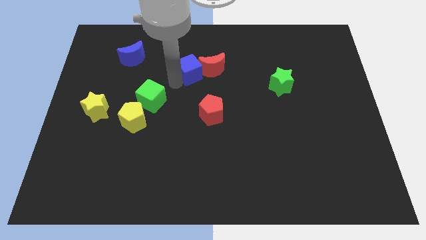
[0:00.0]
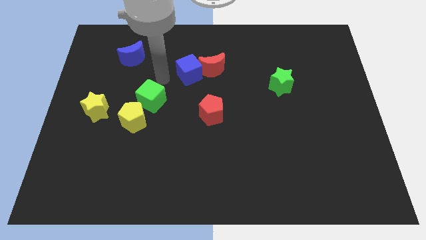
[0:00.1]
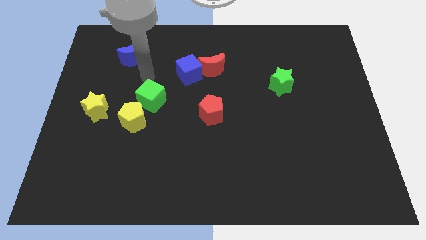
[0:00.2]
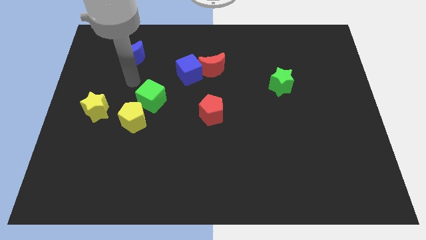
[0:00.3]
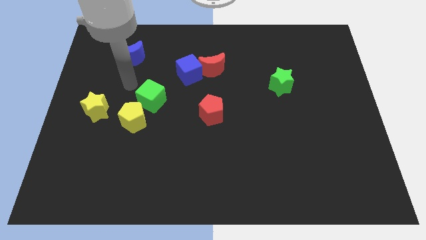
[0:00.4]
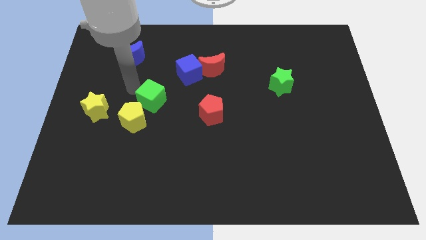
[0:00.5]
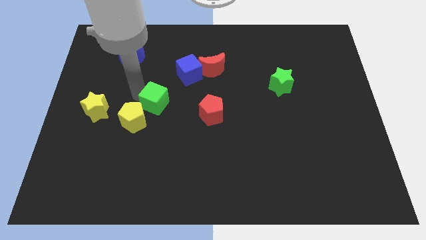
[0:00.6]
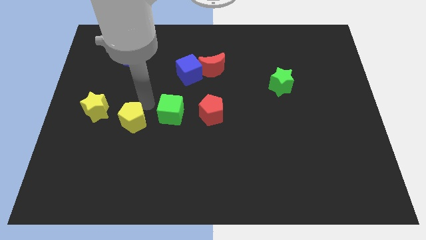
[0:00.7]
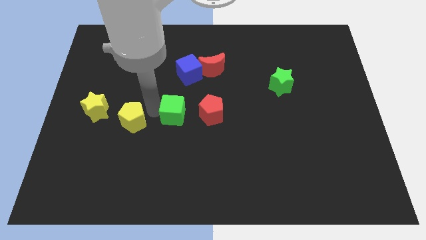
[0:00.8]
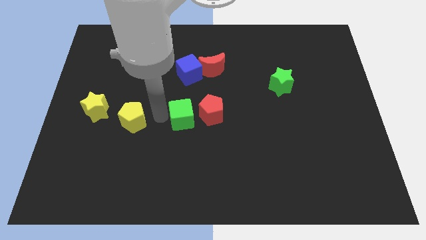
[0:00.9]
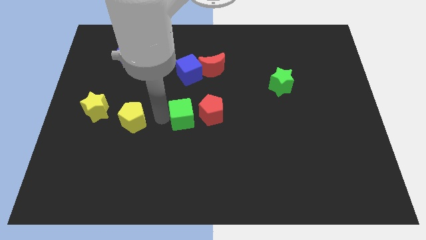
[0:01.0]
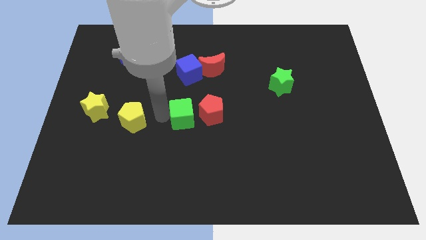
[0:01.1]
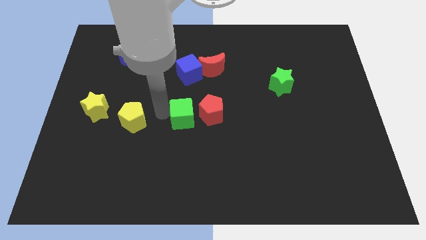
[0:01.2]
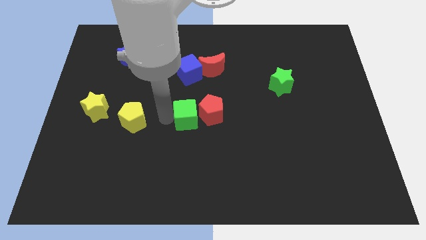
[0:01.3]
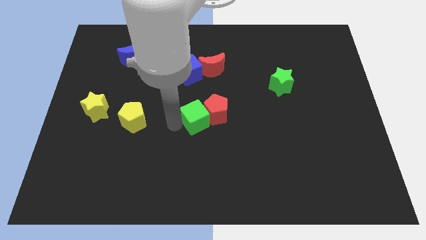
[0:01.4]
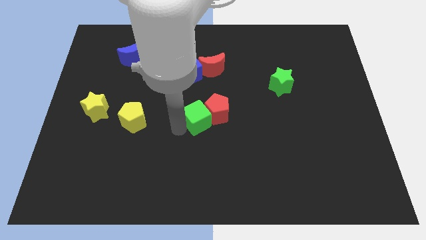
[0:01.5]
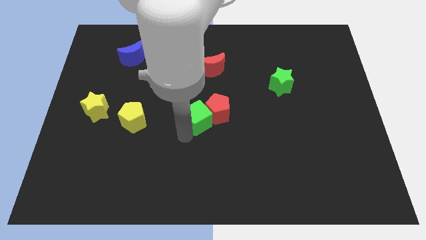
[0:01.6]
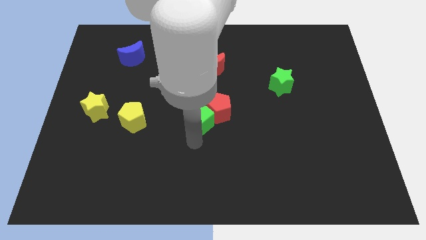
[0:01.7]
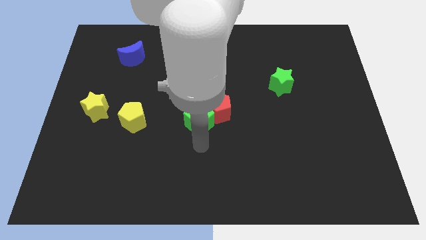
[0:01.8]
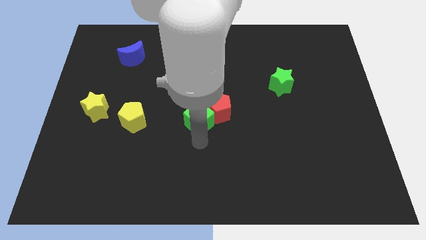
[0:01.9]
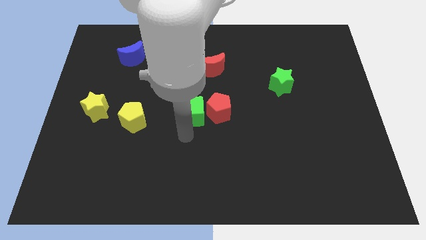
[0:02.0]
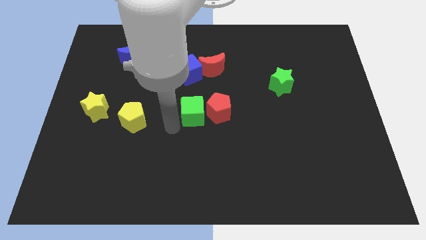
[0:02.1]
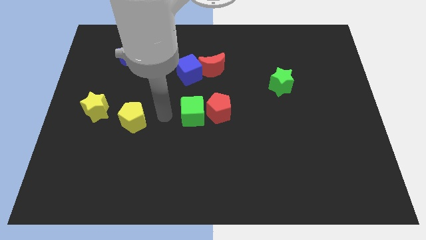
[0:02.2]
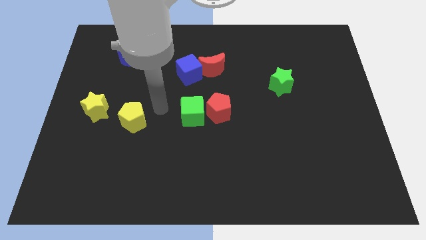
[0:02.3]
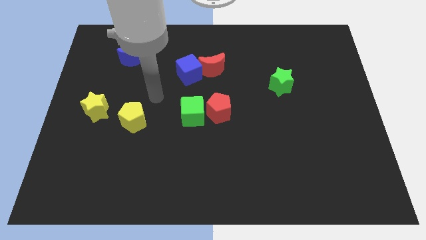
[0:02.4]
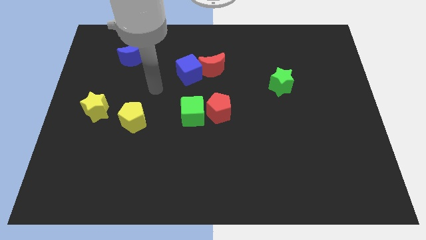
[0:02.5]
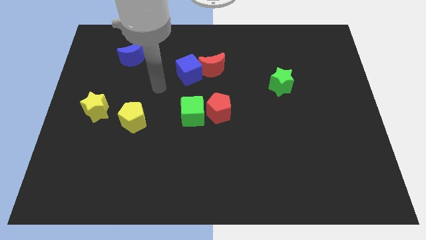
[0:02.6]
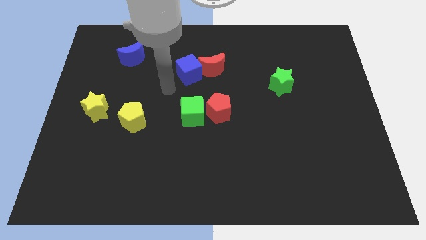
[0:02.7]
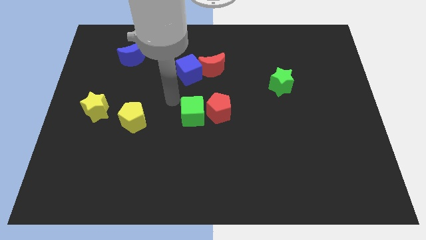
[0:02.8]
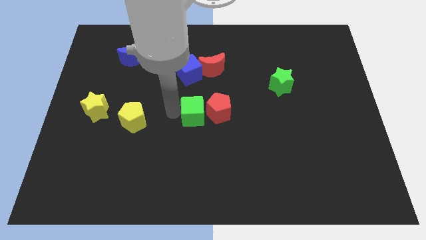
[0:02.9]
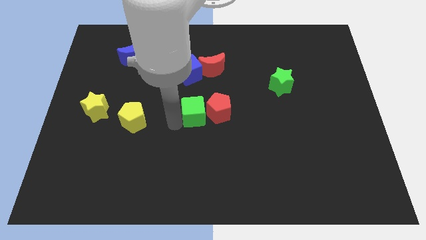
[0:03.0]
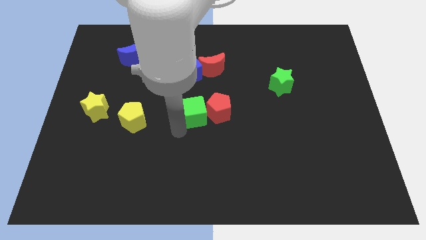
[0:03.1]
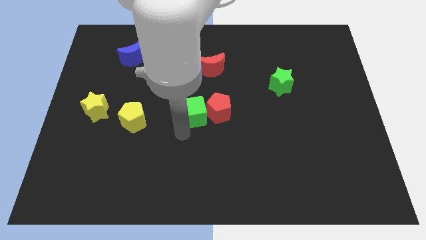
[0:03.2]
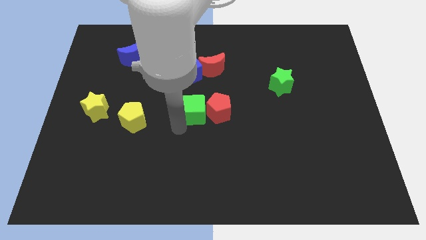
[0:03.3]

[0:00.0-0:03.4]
push the green cube into red pentagon

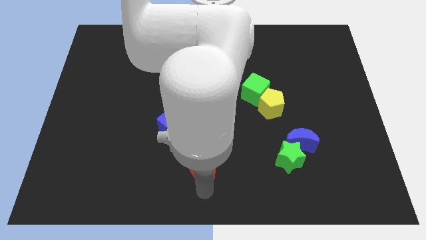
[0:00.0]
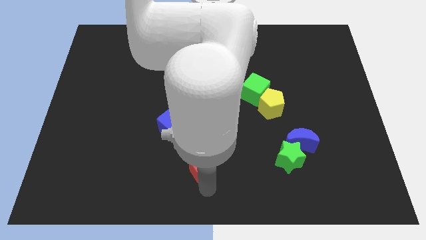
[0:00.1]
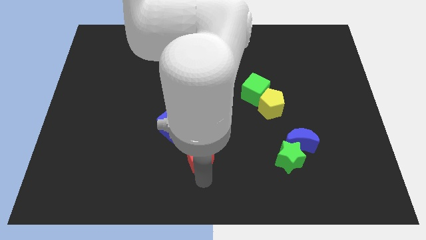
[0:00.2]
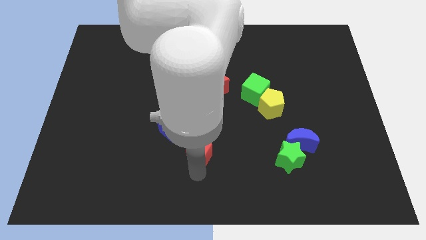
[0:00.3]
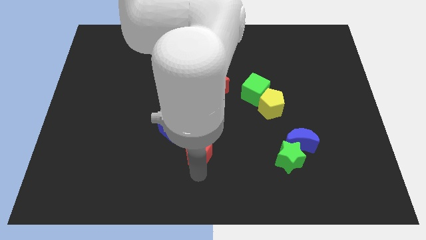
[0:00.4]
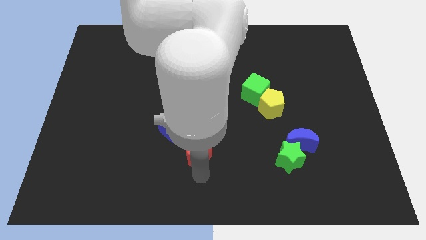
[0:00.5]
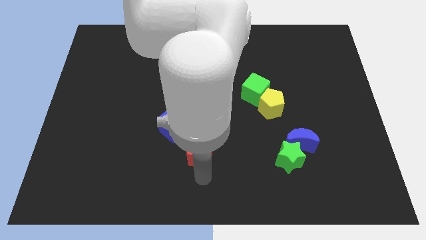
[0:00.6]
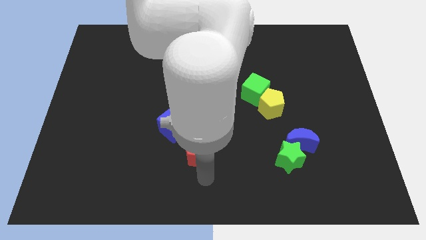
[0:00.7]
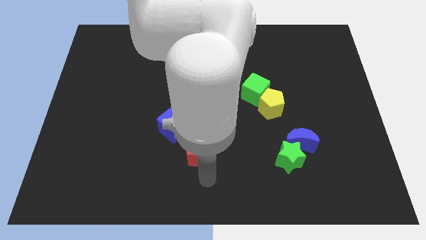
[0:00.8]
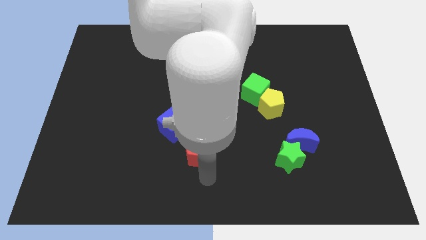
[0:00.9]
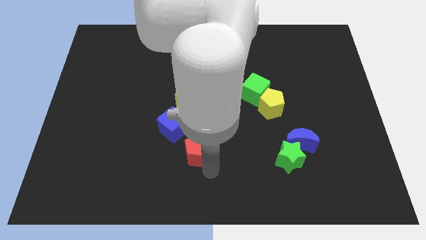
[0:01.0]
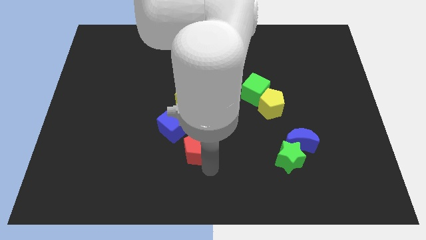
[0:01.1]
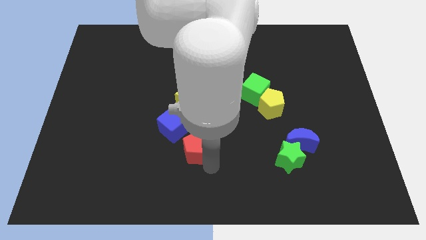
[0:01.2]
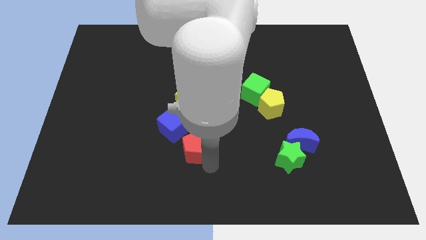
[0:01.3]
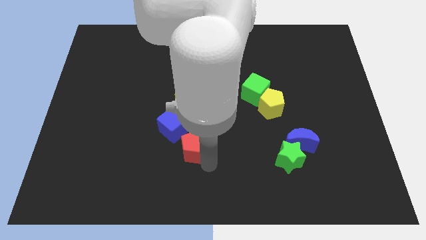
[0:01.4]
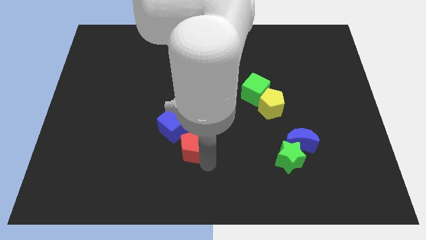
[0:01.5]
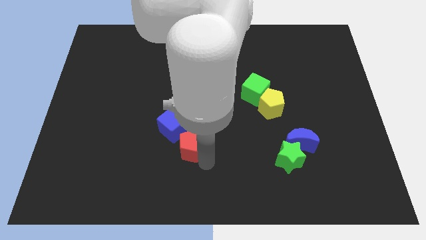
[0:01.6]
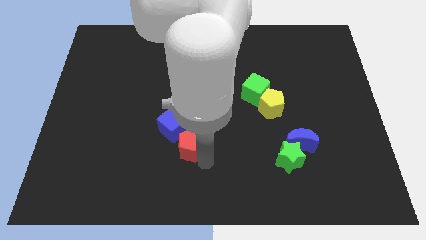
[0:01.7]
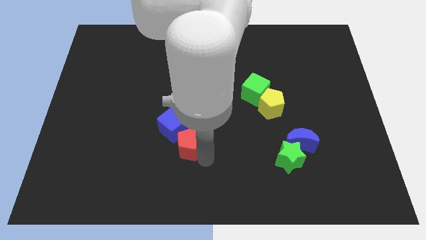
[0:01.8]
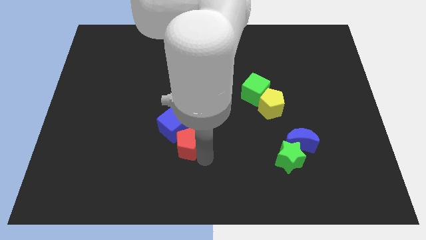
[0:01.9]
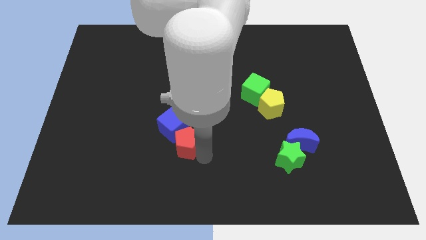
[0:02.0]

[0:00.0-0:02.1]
push the red pentagon into the blue cube

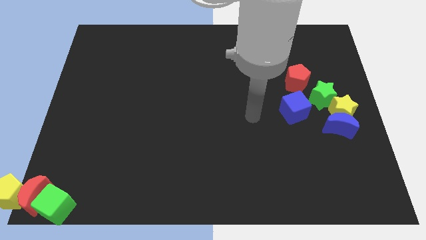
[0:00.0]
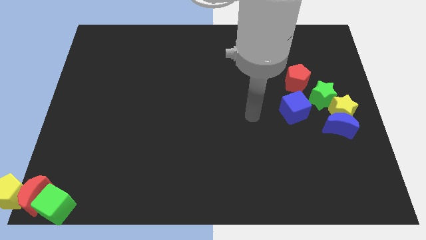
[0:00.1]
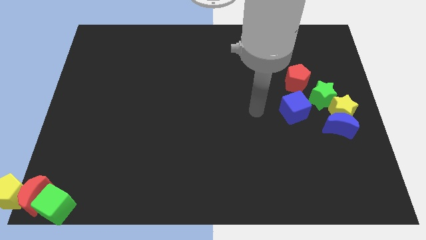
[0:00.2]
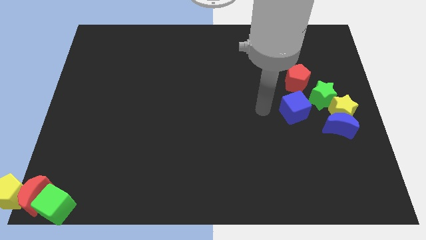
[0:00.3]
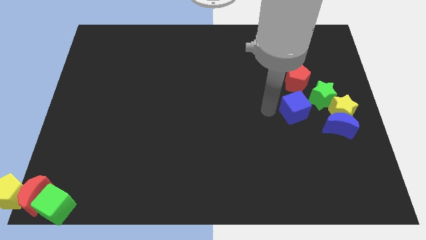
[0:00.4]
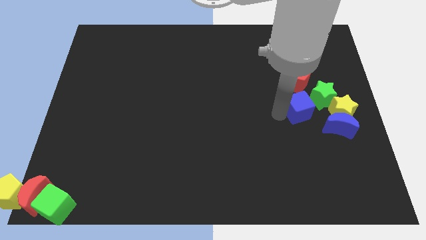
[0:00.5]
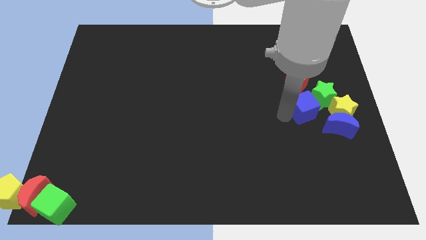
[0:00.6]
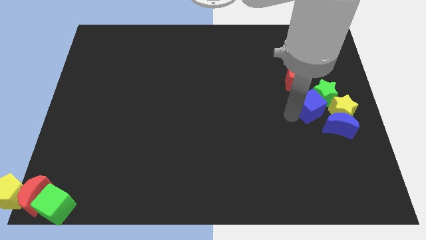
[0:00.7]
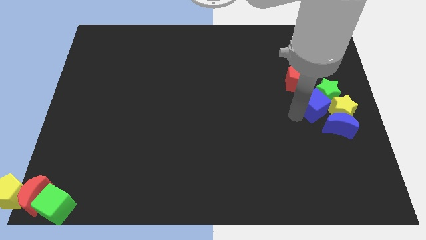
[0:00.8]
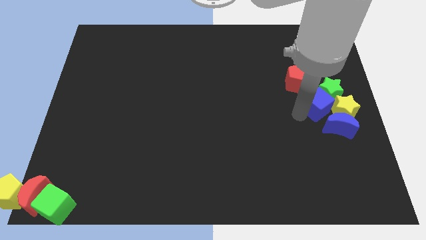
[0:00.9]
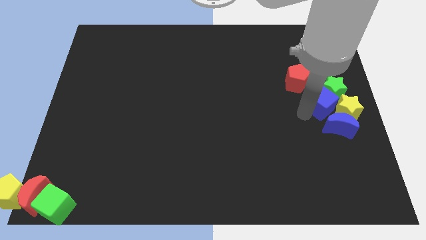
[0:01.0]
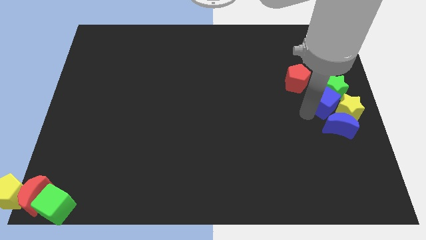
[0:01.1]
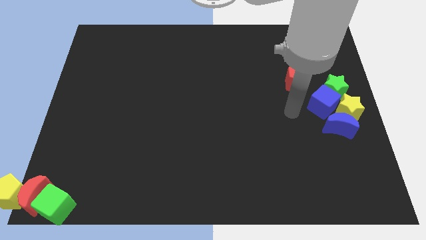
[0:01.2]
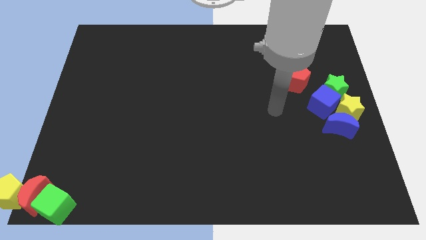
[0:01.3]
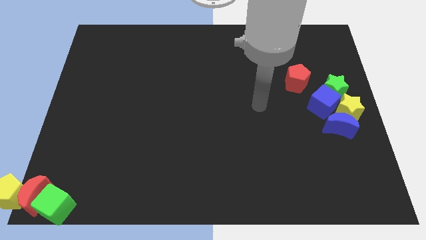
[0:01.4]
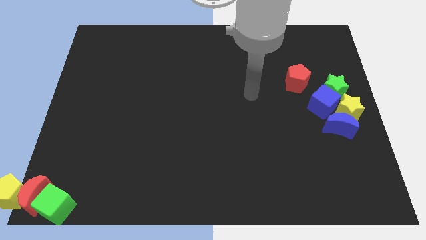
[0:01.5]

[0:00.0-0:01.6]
push the blue cube into the green star

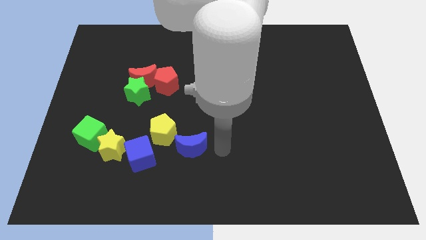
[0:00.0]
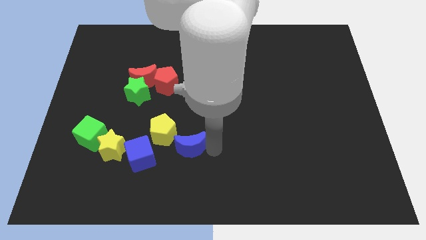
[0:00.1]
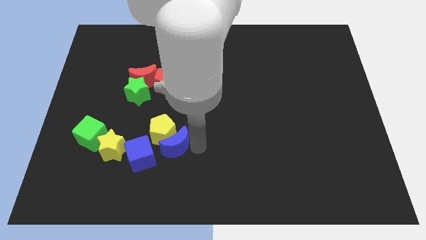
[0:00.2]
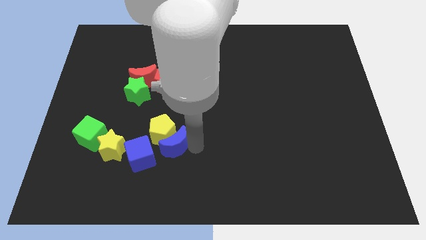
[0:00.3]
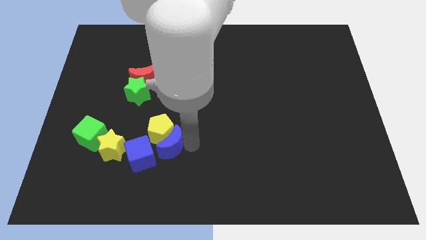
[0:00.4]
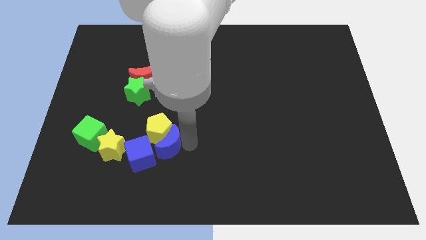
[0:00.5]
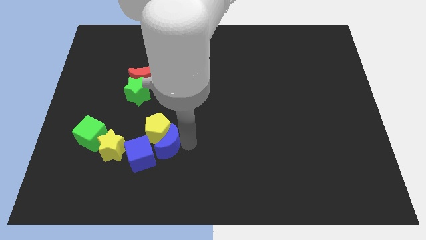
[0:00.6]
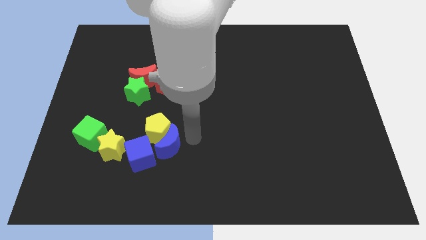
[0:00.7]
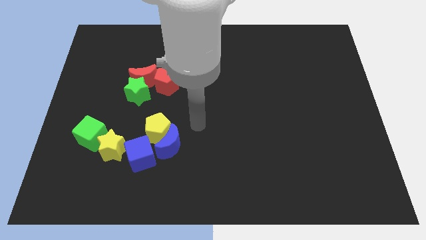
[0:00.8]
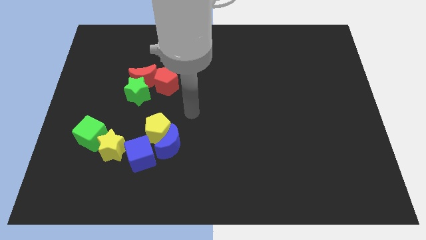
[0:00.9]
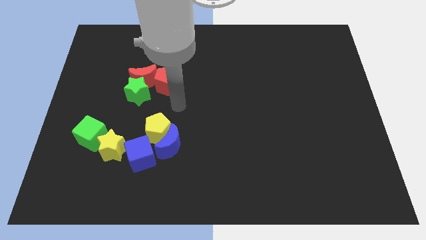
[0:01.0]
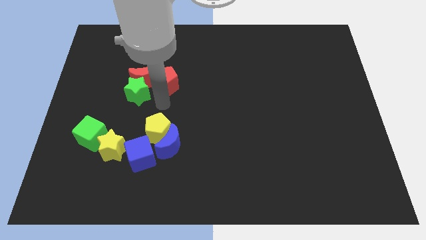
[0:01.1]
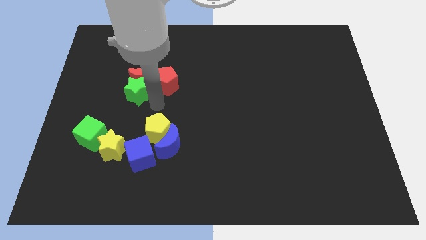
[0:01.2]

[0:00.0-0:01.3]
slide the blue crescent into the yellow pentagon

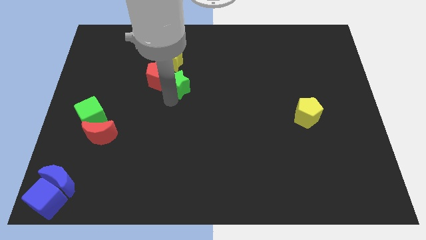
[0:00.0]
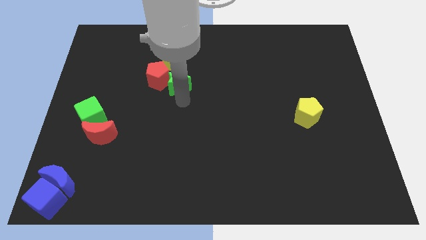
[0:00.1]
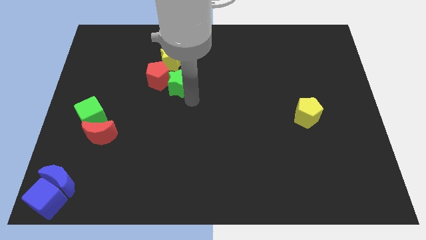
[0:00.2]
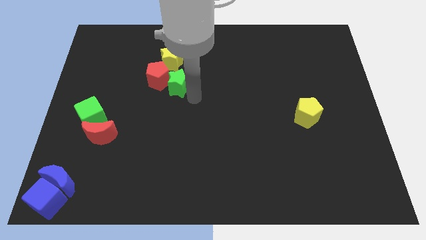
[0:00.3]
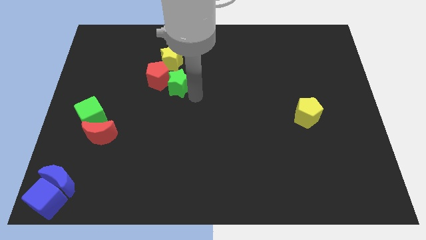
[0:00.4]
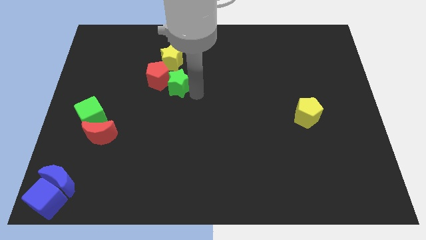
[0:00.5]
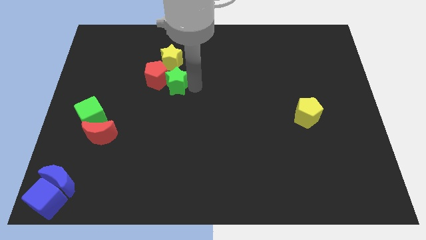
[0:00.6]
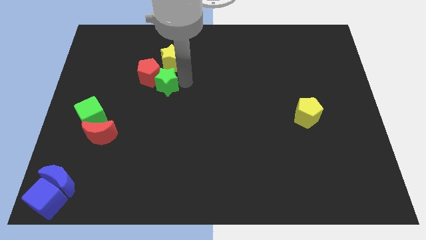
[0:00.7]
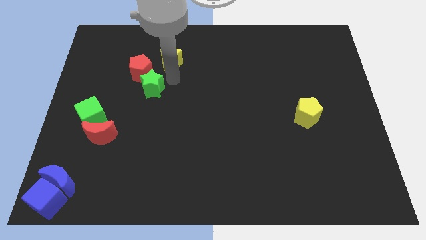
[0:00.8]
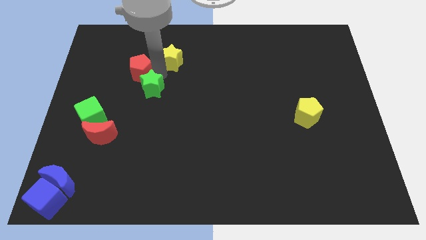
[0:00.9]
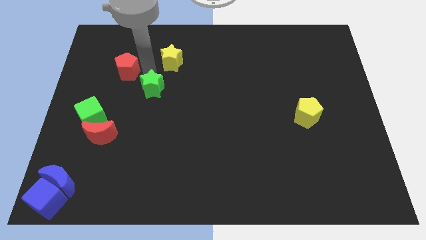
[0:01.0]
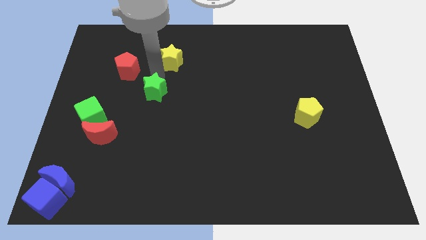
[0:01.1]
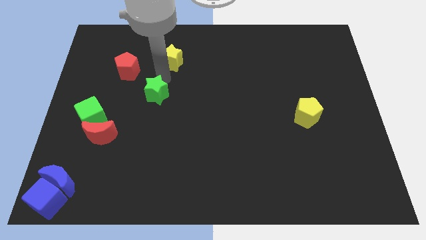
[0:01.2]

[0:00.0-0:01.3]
push the green star into the red pentagon
